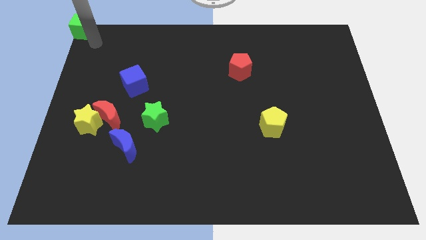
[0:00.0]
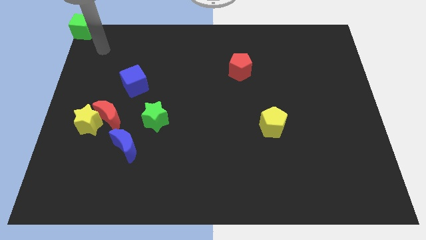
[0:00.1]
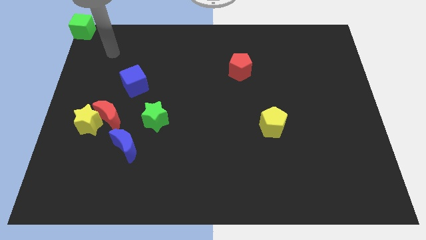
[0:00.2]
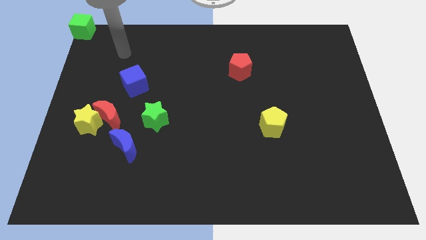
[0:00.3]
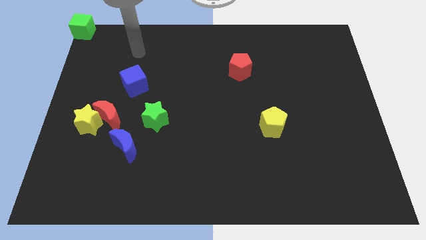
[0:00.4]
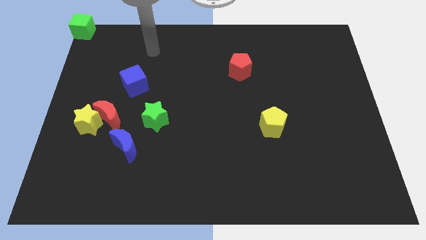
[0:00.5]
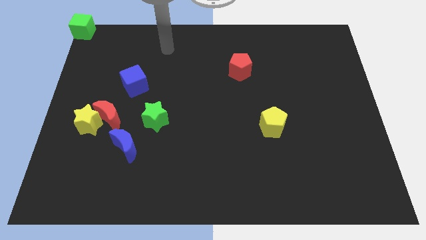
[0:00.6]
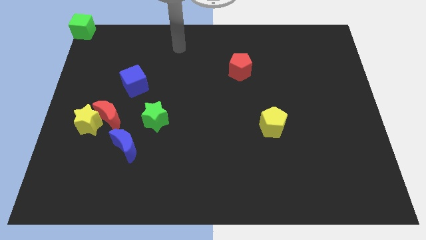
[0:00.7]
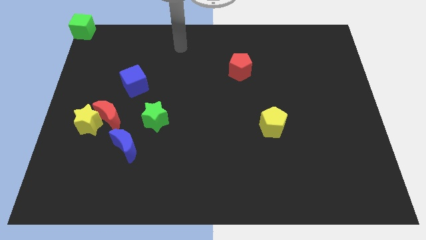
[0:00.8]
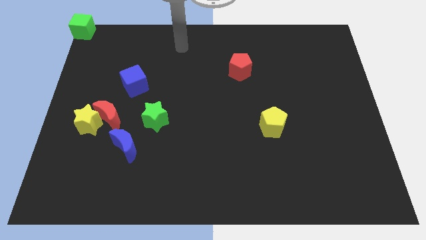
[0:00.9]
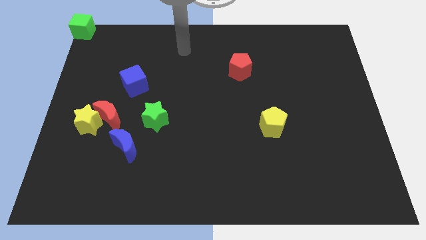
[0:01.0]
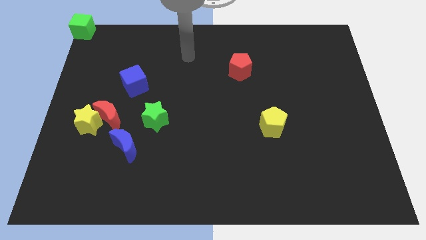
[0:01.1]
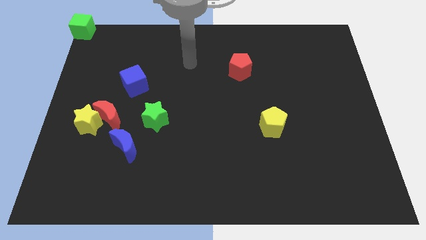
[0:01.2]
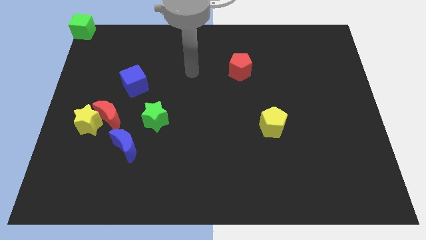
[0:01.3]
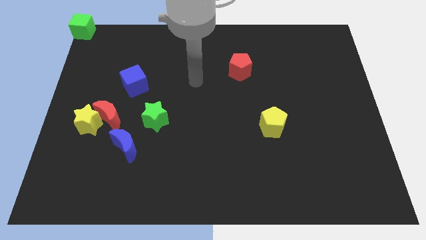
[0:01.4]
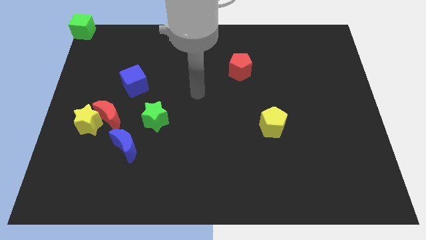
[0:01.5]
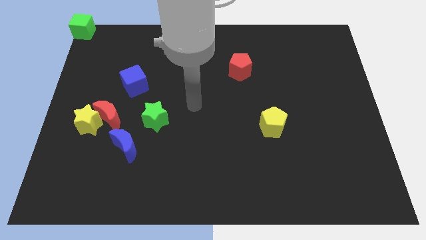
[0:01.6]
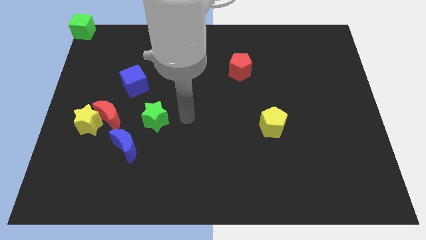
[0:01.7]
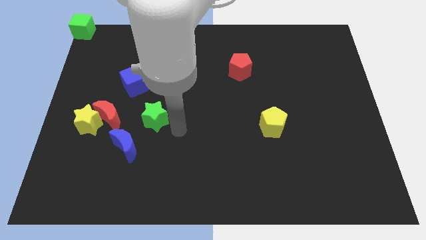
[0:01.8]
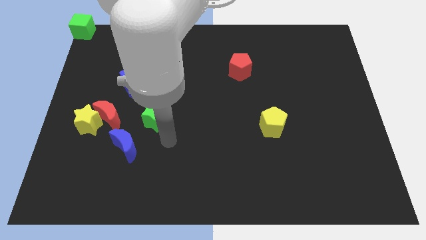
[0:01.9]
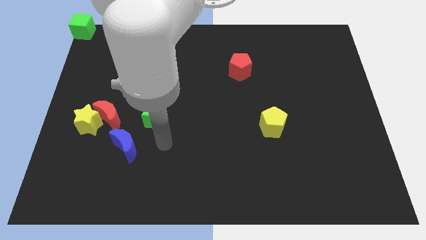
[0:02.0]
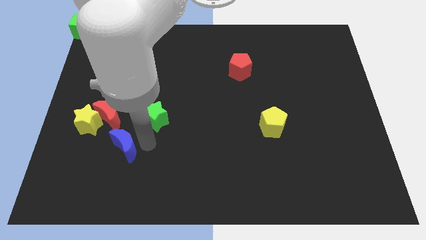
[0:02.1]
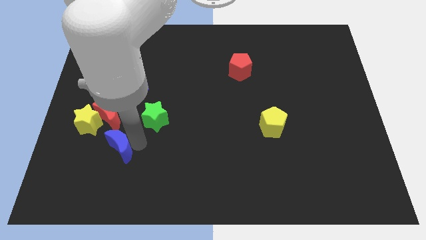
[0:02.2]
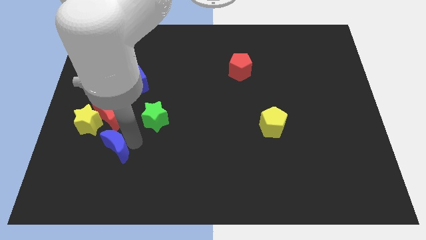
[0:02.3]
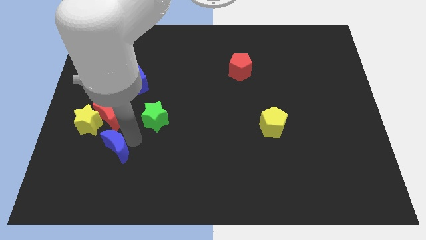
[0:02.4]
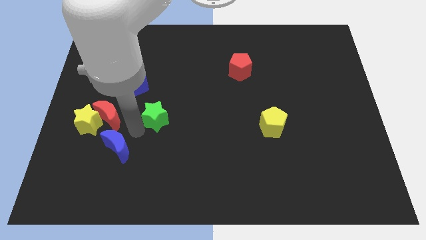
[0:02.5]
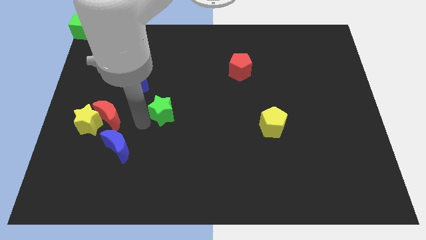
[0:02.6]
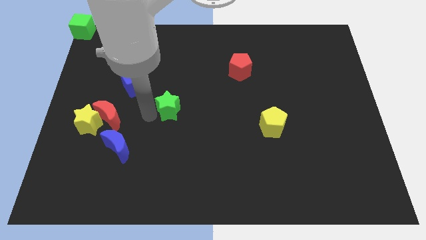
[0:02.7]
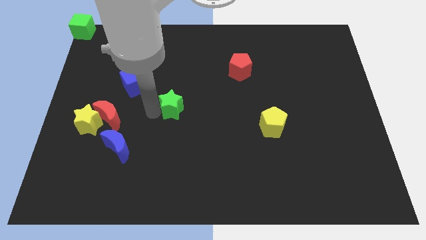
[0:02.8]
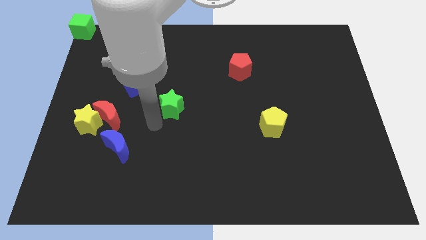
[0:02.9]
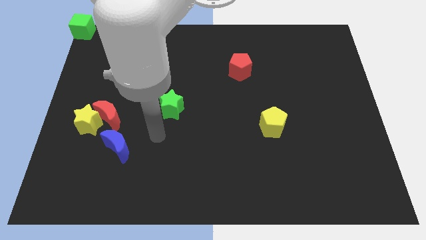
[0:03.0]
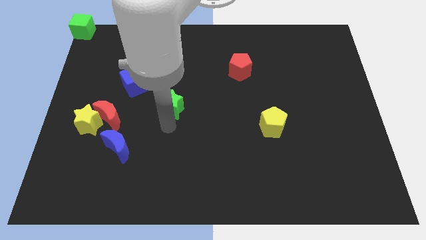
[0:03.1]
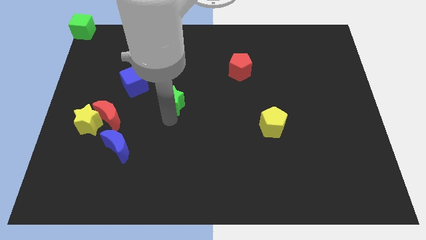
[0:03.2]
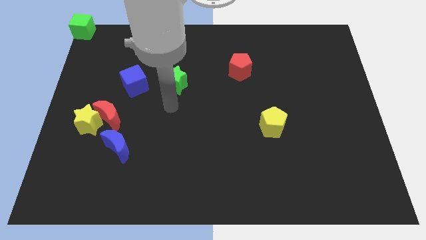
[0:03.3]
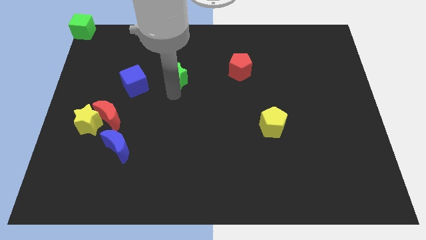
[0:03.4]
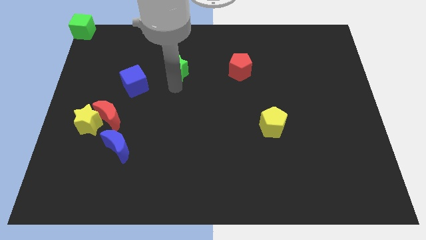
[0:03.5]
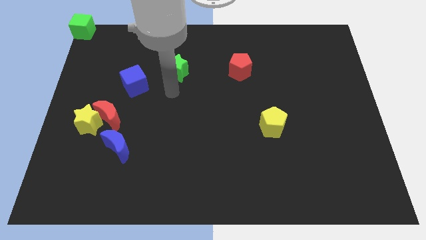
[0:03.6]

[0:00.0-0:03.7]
place the green star at left side of the red pentagon

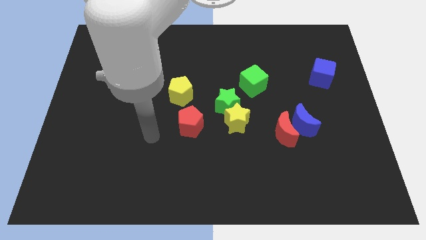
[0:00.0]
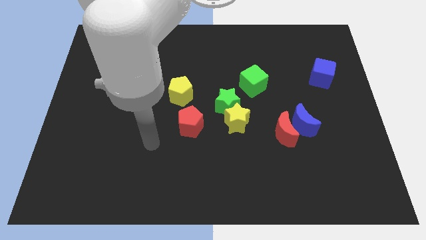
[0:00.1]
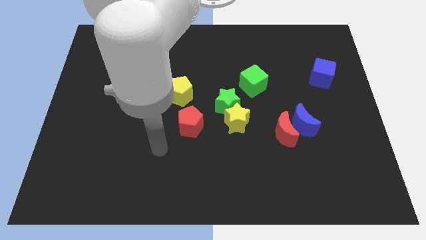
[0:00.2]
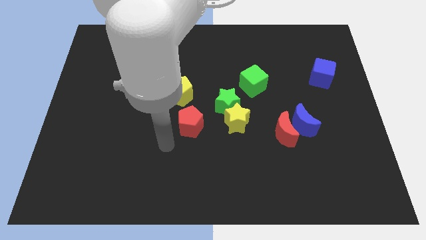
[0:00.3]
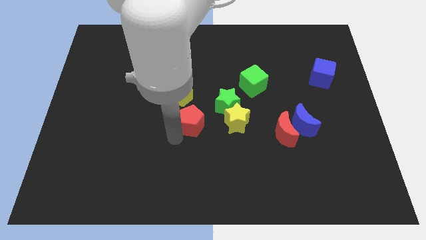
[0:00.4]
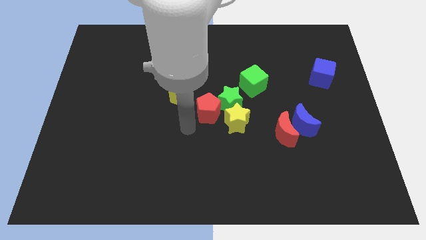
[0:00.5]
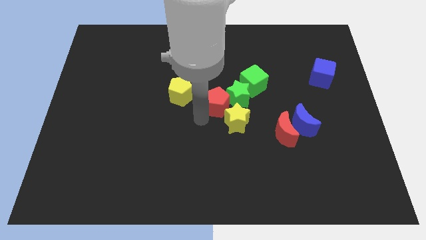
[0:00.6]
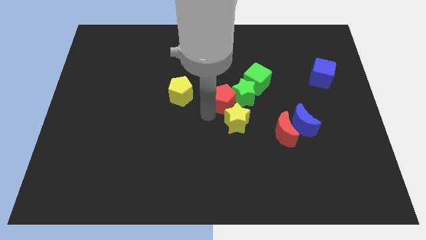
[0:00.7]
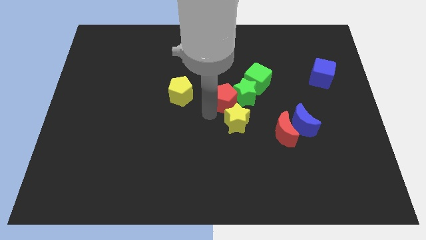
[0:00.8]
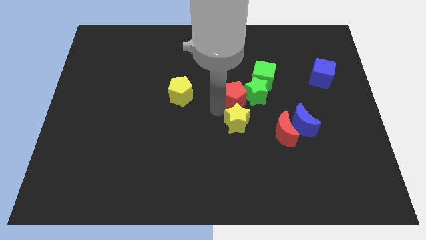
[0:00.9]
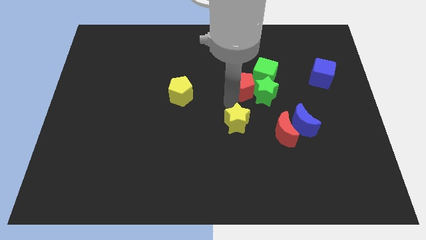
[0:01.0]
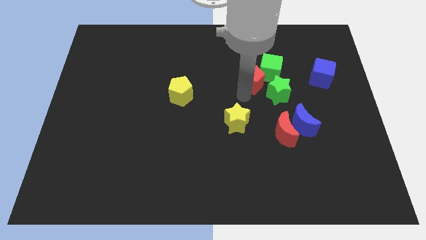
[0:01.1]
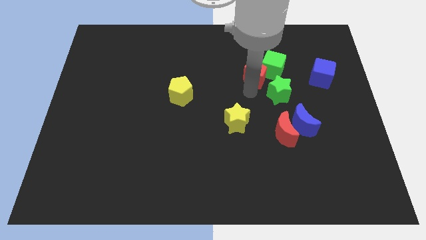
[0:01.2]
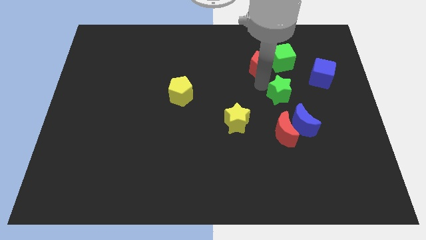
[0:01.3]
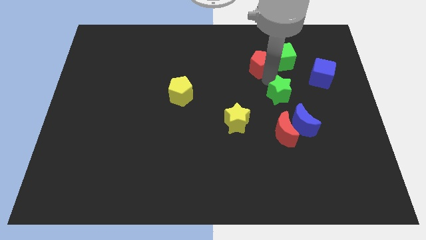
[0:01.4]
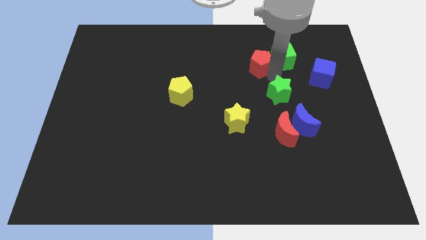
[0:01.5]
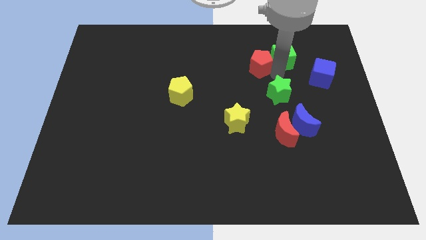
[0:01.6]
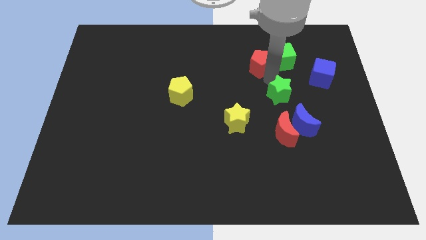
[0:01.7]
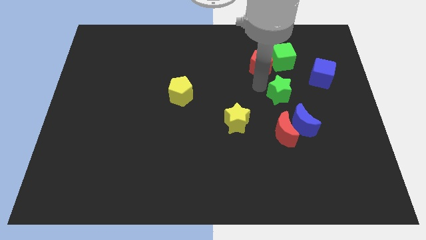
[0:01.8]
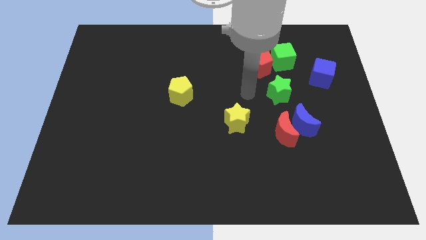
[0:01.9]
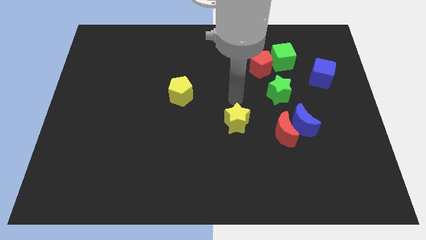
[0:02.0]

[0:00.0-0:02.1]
push red pentagon into green cube

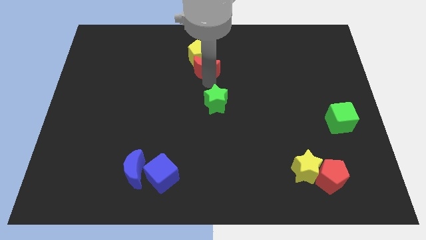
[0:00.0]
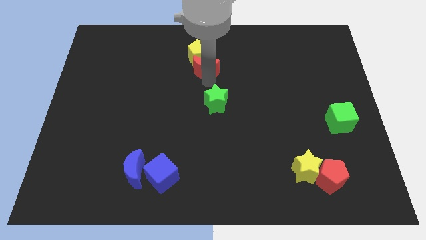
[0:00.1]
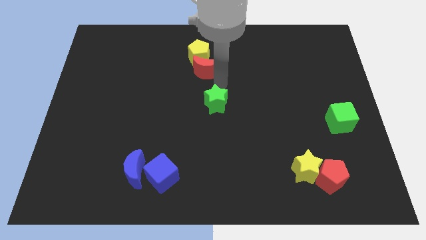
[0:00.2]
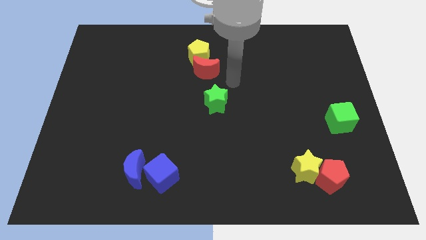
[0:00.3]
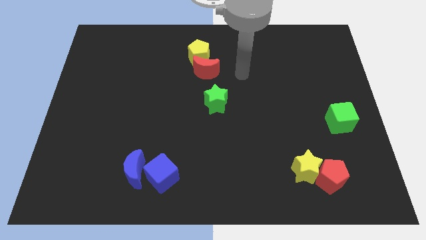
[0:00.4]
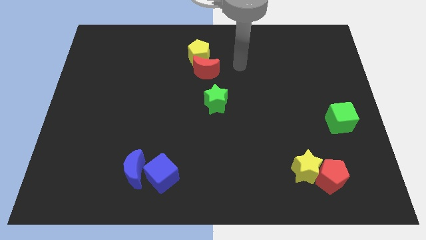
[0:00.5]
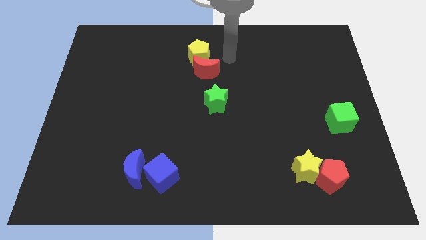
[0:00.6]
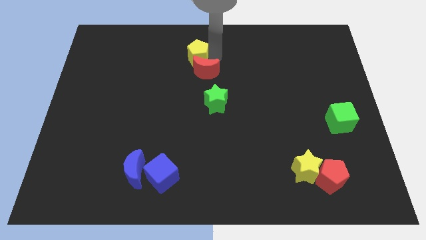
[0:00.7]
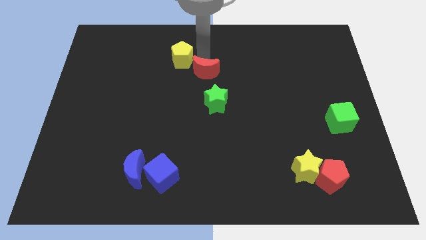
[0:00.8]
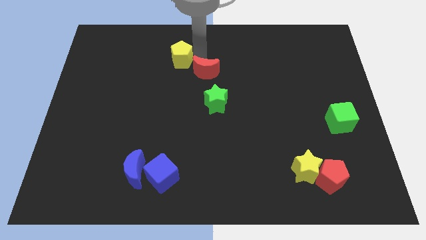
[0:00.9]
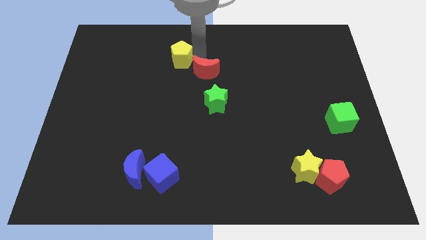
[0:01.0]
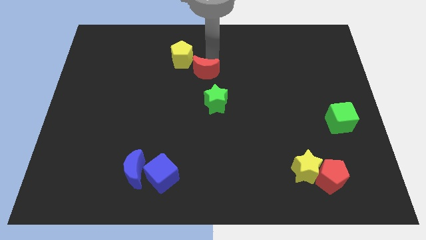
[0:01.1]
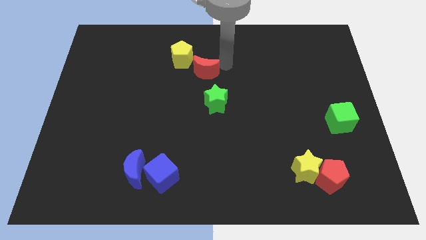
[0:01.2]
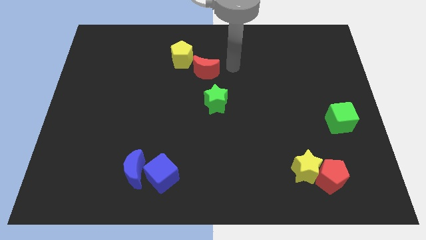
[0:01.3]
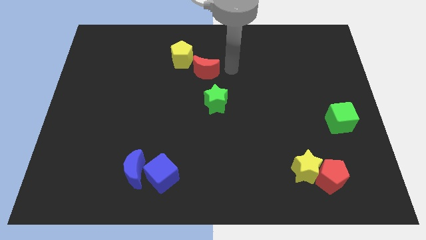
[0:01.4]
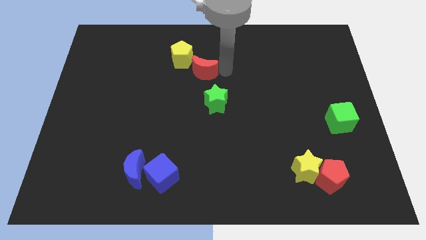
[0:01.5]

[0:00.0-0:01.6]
slightly push the yellow pentagon towards the left of the board

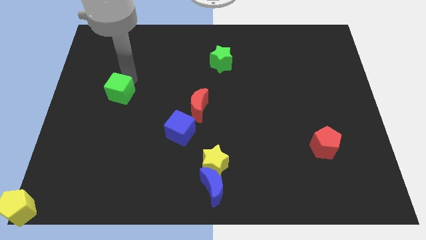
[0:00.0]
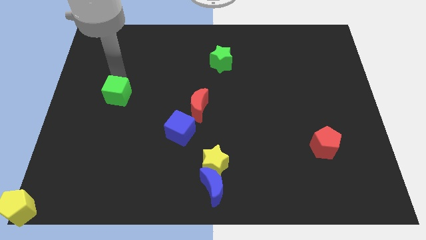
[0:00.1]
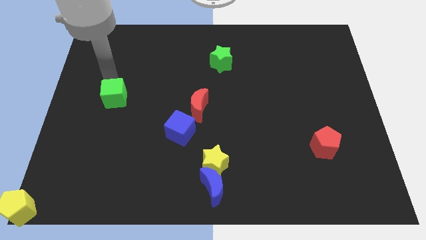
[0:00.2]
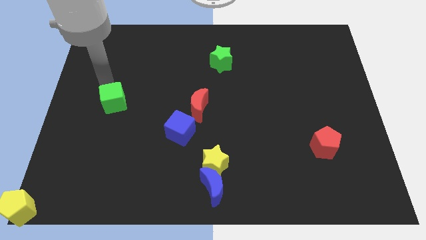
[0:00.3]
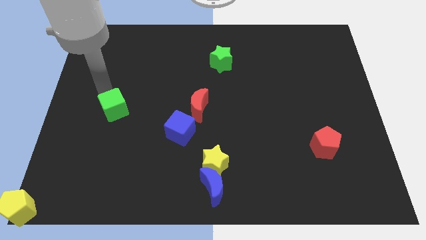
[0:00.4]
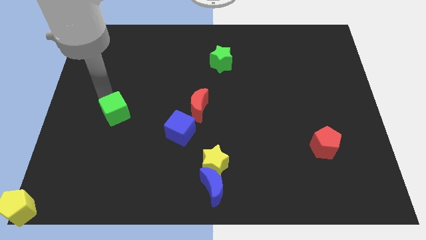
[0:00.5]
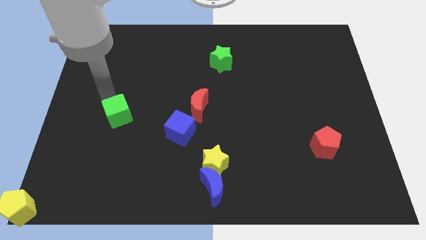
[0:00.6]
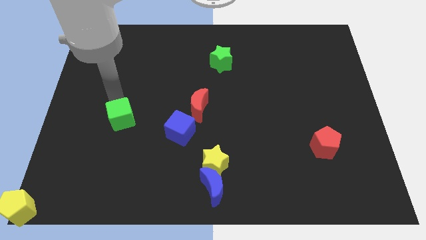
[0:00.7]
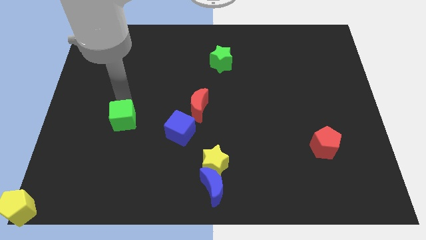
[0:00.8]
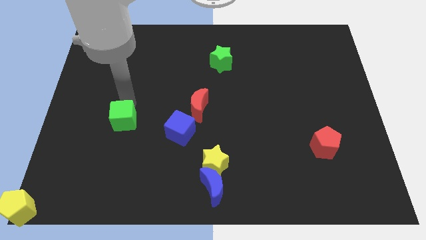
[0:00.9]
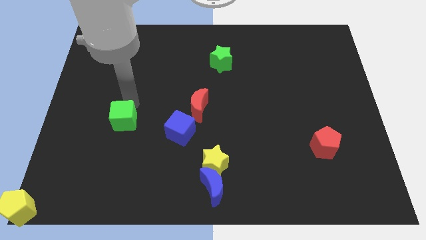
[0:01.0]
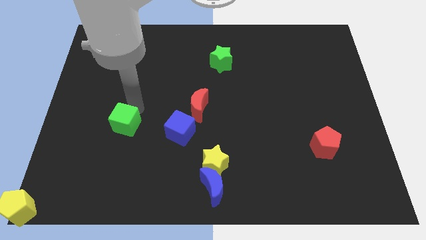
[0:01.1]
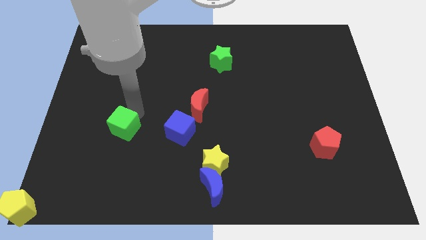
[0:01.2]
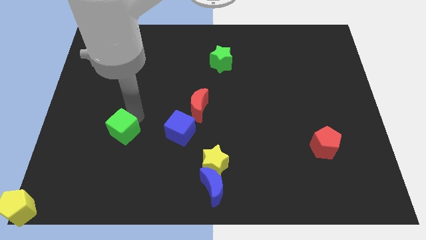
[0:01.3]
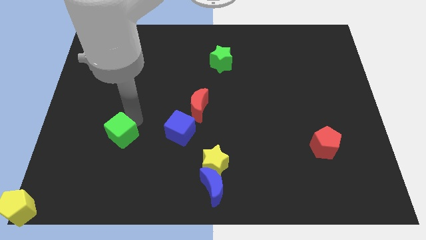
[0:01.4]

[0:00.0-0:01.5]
place green cube parallel left to blue cube

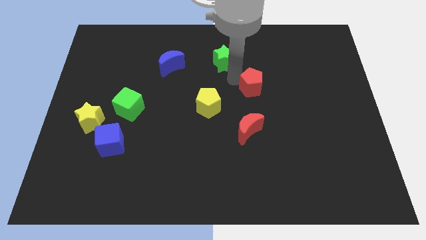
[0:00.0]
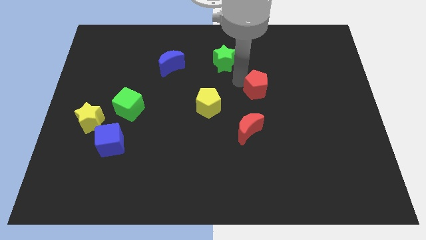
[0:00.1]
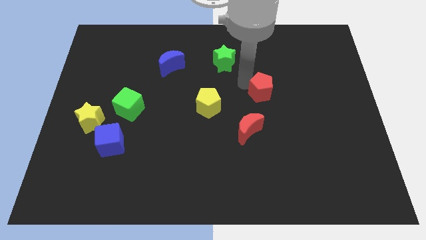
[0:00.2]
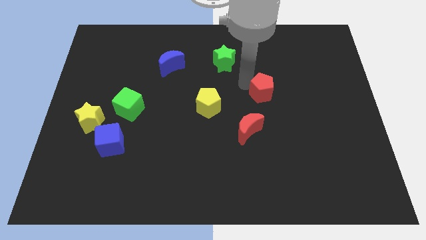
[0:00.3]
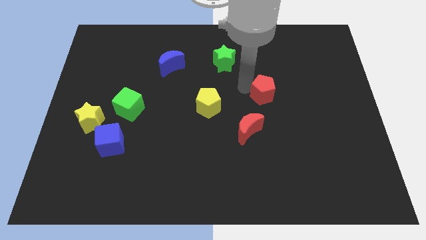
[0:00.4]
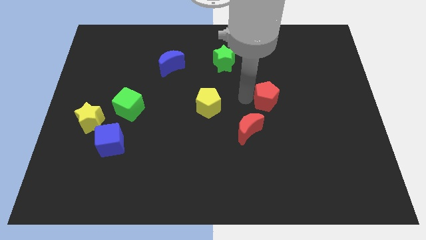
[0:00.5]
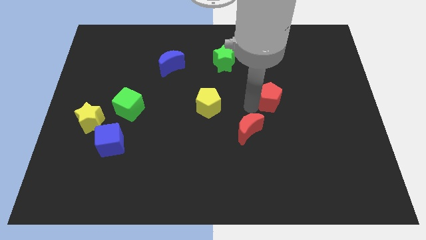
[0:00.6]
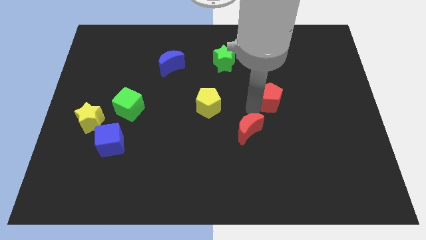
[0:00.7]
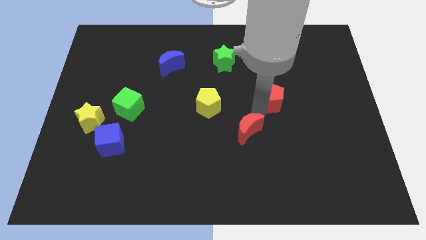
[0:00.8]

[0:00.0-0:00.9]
move the red pentagon slightly down
